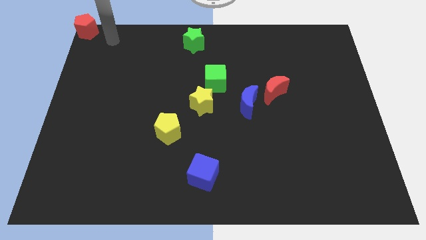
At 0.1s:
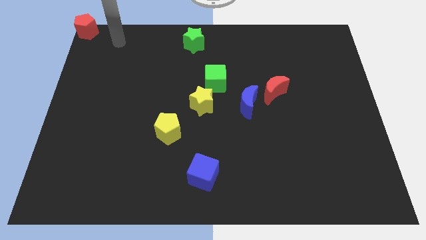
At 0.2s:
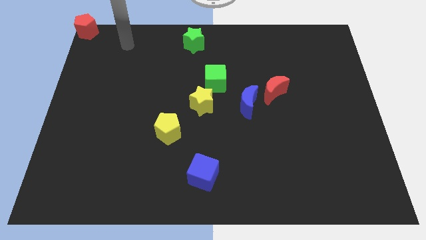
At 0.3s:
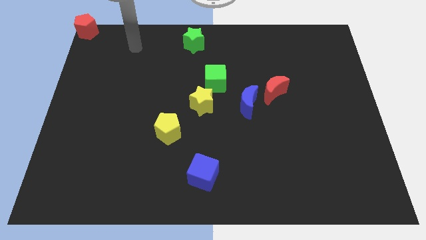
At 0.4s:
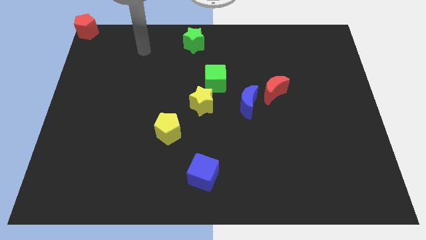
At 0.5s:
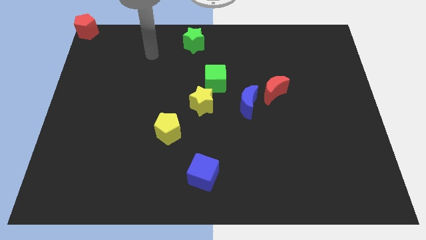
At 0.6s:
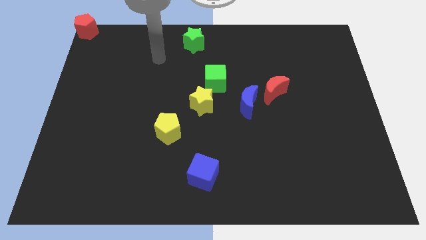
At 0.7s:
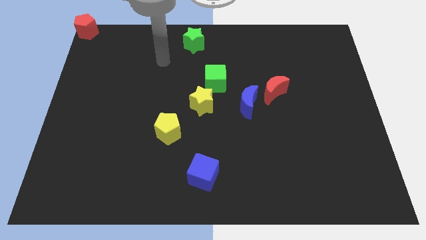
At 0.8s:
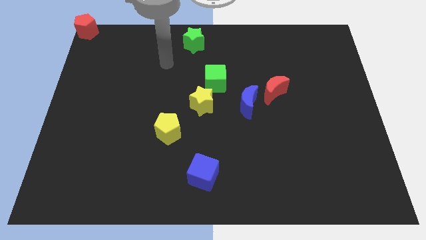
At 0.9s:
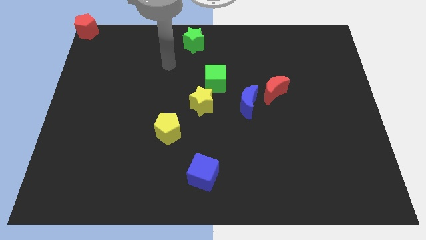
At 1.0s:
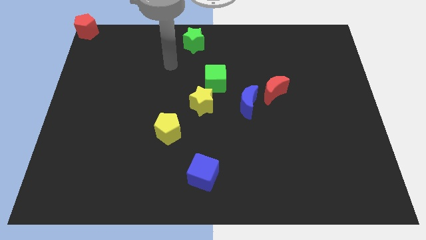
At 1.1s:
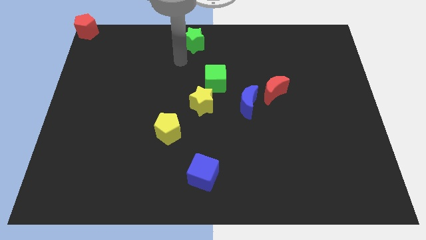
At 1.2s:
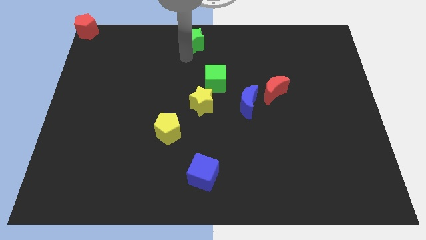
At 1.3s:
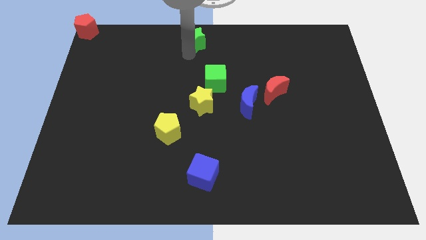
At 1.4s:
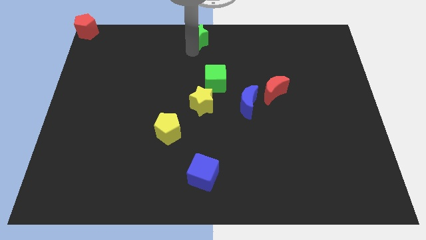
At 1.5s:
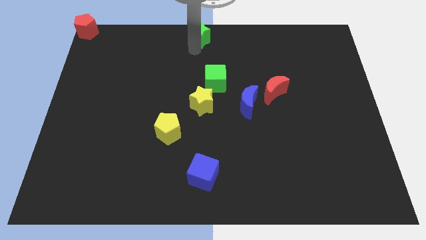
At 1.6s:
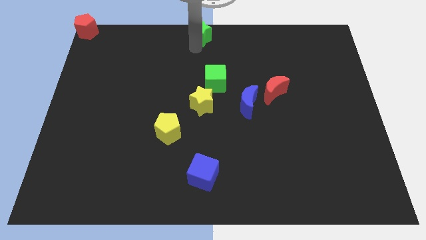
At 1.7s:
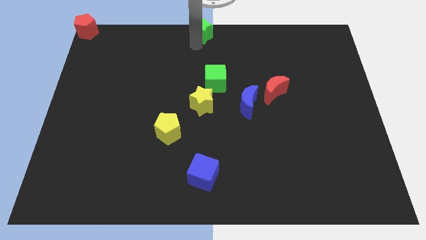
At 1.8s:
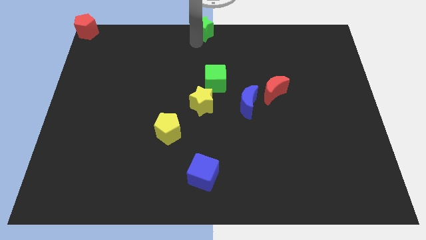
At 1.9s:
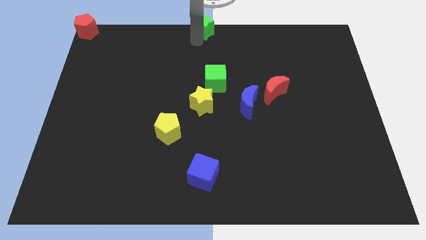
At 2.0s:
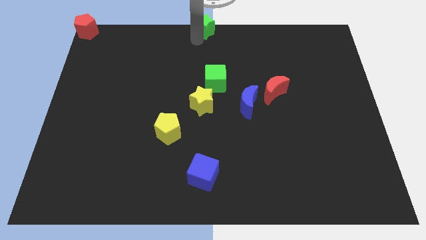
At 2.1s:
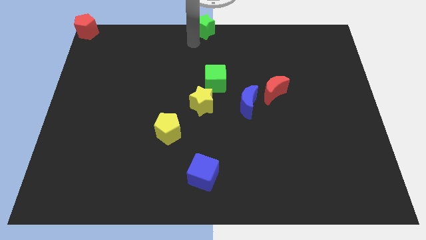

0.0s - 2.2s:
move the green star to the top center of the board

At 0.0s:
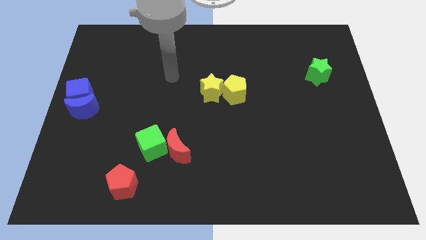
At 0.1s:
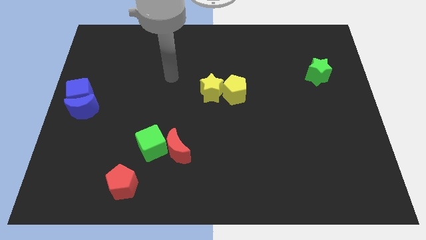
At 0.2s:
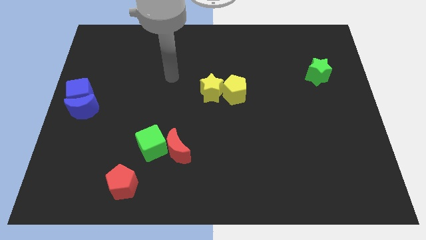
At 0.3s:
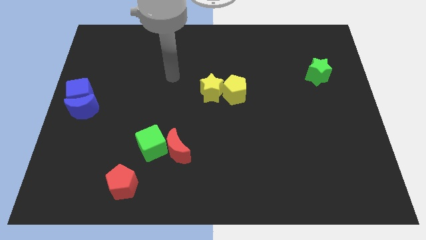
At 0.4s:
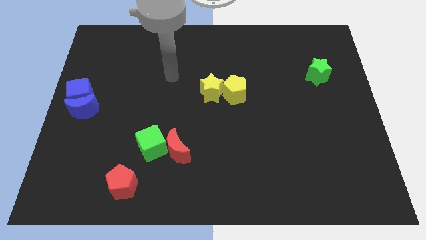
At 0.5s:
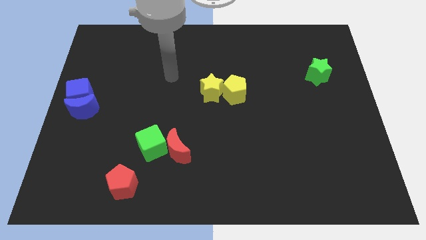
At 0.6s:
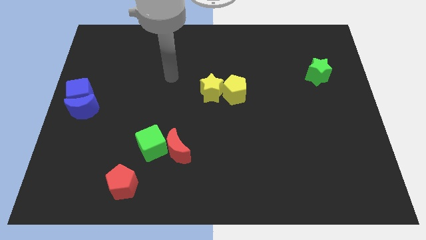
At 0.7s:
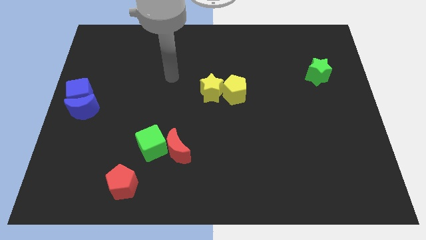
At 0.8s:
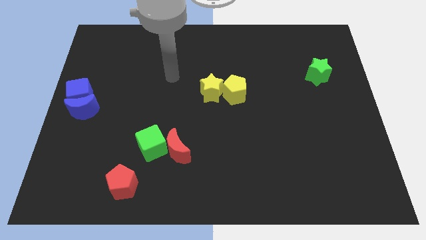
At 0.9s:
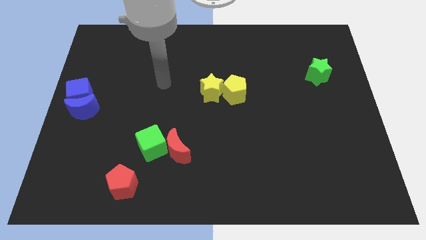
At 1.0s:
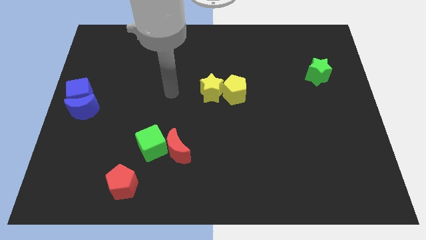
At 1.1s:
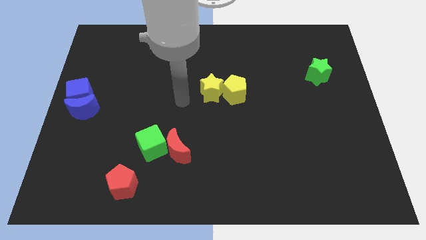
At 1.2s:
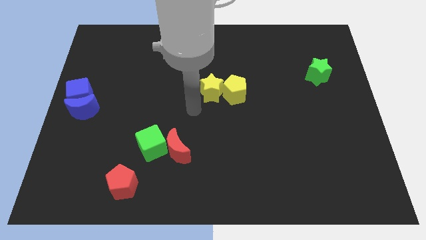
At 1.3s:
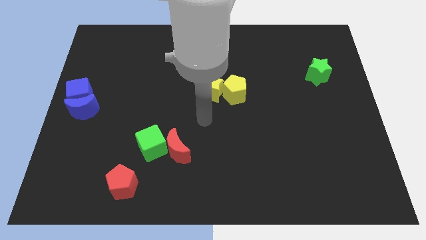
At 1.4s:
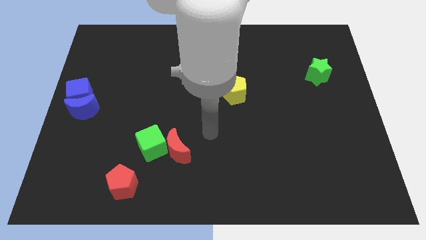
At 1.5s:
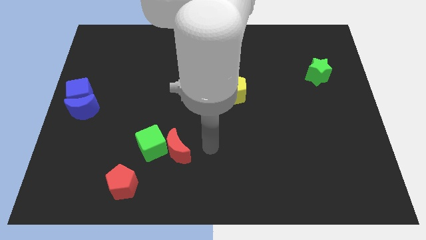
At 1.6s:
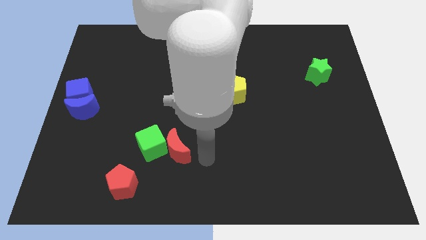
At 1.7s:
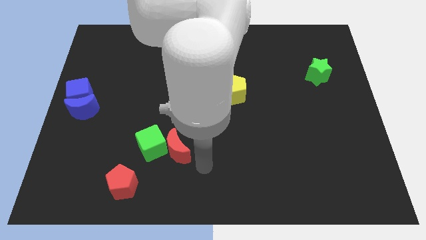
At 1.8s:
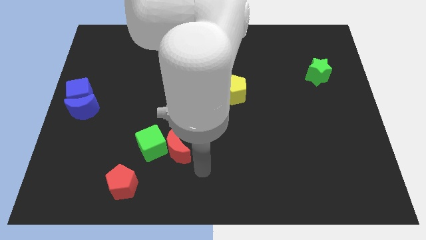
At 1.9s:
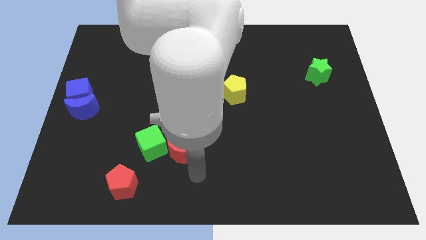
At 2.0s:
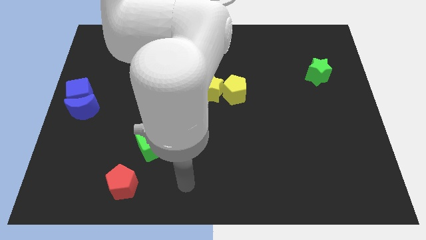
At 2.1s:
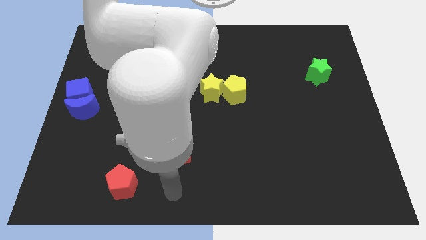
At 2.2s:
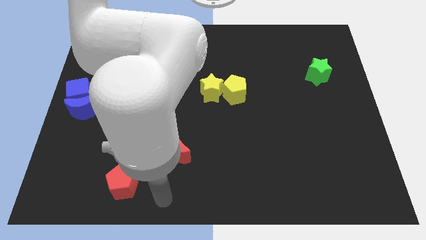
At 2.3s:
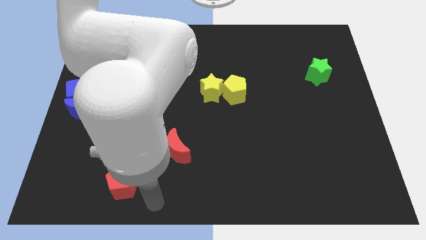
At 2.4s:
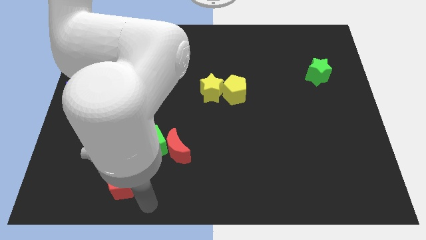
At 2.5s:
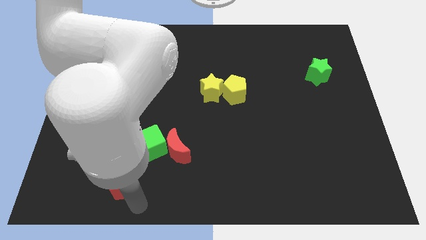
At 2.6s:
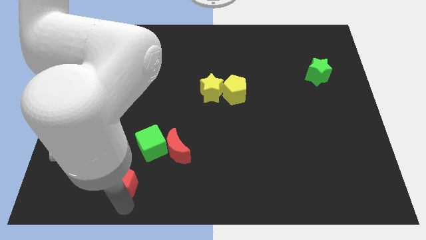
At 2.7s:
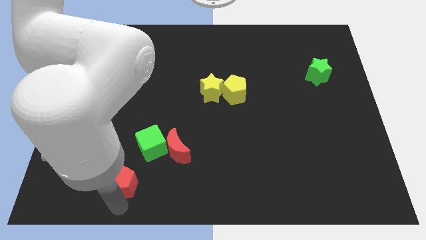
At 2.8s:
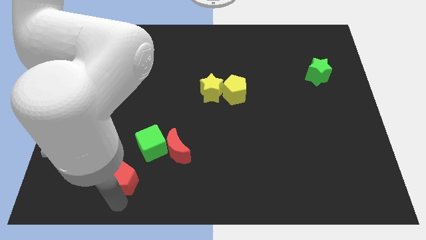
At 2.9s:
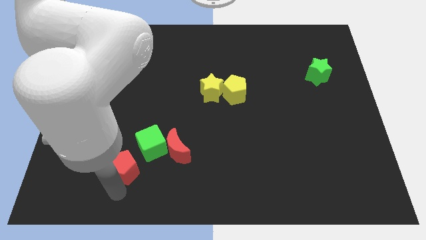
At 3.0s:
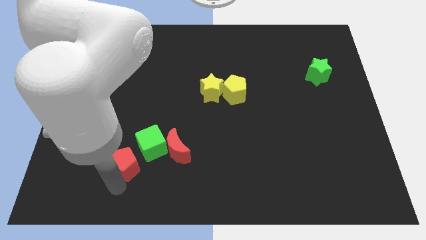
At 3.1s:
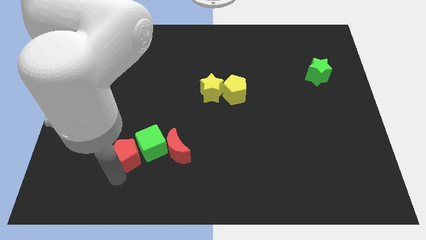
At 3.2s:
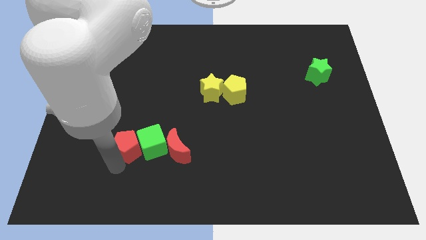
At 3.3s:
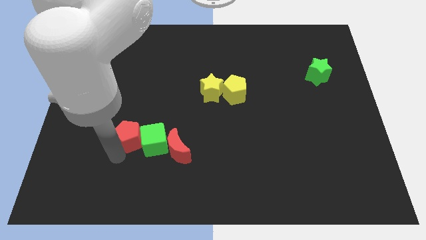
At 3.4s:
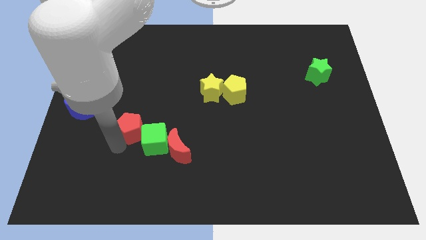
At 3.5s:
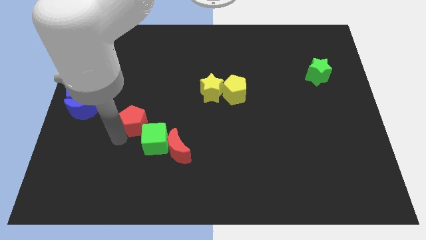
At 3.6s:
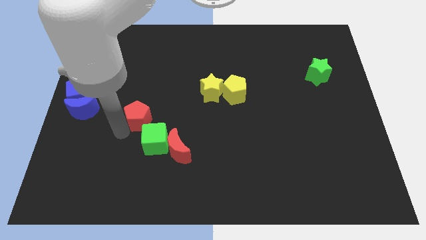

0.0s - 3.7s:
move the red pentagon towards the green cube

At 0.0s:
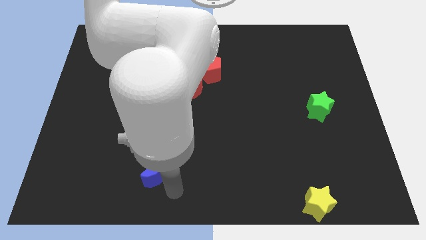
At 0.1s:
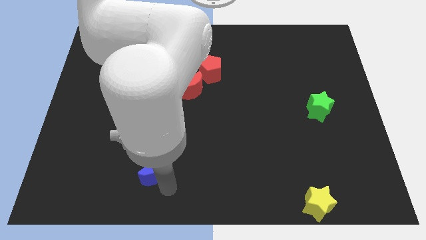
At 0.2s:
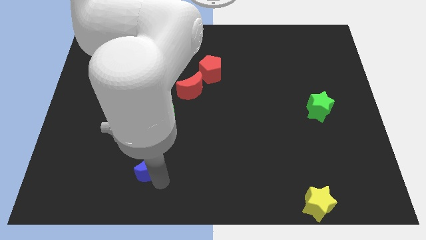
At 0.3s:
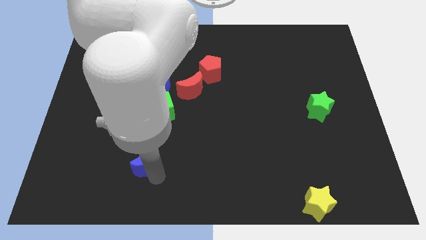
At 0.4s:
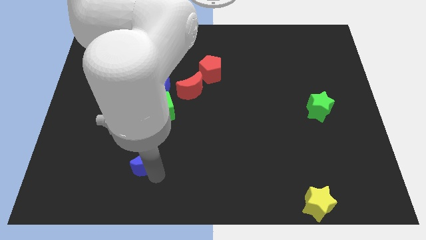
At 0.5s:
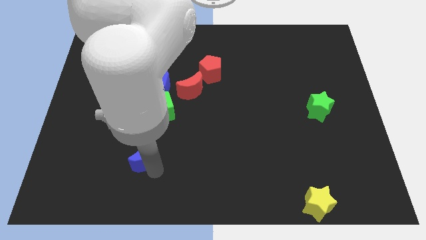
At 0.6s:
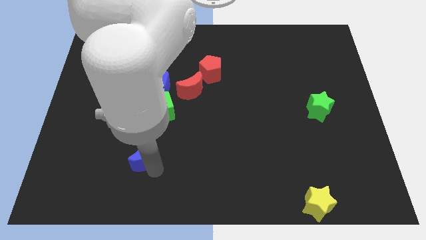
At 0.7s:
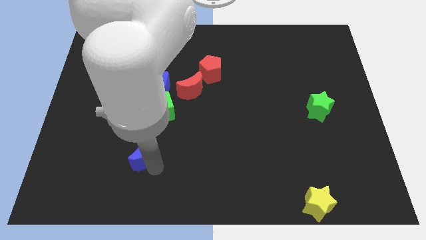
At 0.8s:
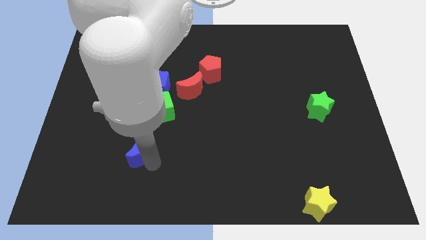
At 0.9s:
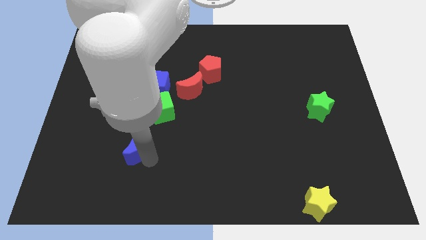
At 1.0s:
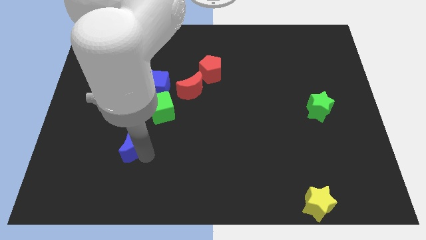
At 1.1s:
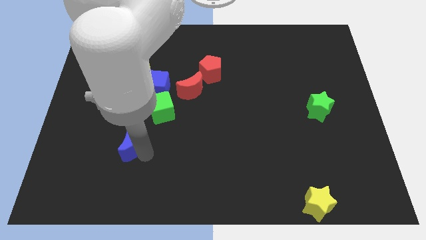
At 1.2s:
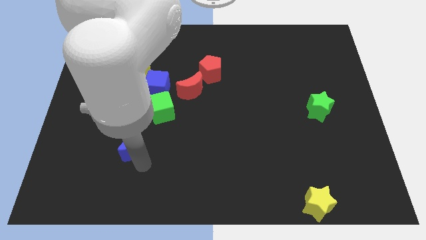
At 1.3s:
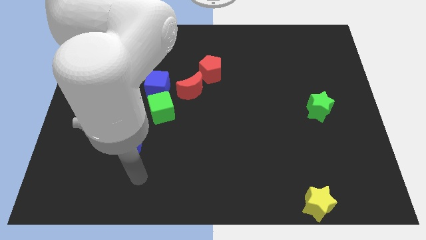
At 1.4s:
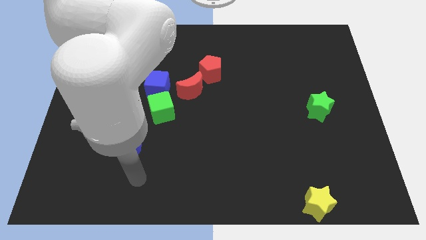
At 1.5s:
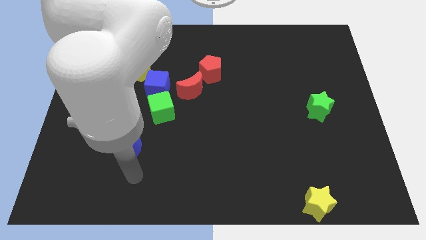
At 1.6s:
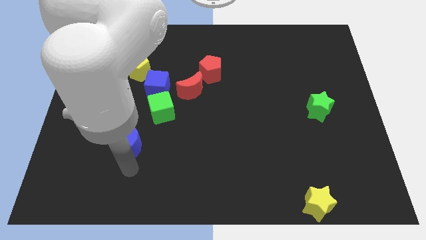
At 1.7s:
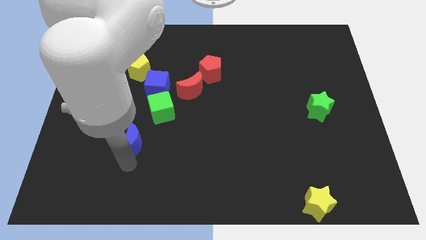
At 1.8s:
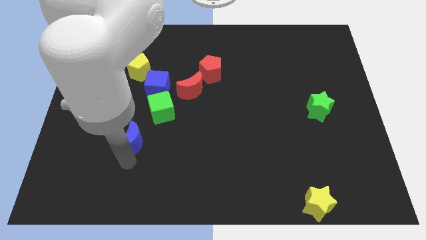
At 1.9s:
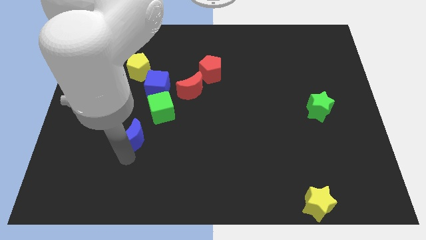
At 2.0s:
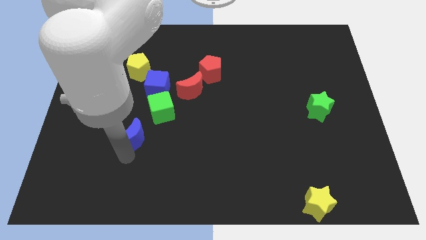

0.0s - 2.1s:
move blue crescent towards the left of the green cube

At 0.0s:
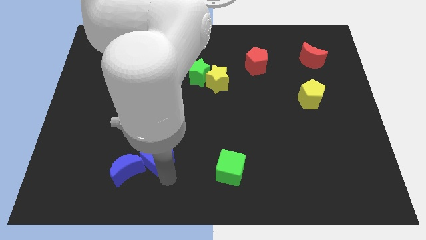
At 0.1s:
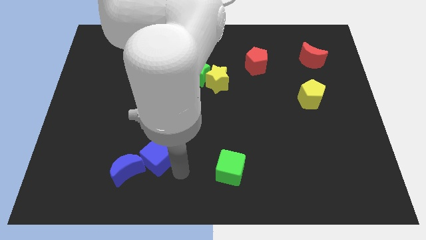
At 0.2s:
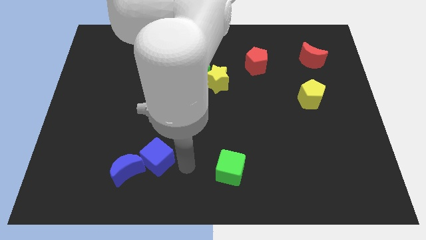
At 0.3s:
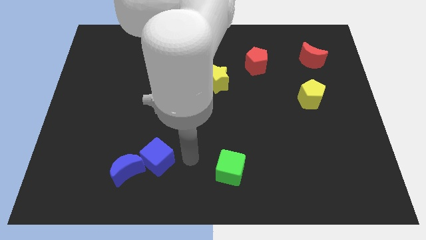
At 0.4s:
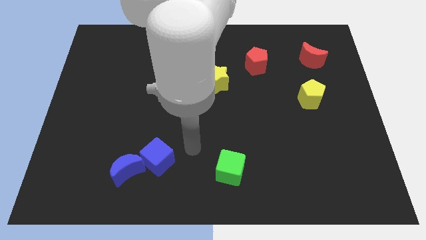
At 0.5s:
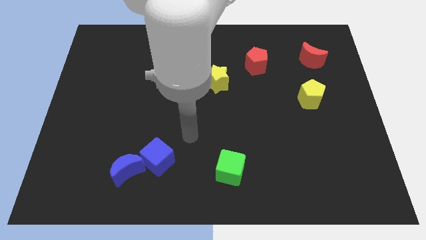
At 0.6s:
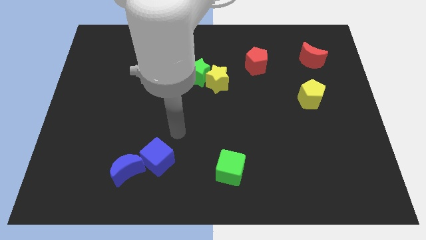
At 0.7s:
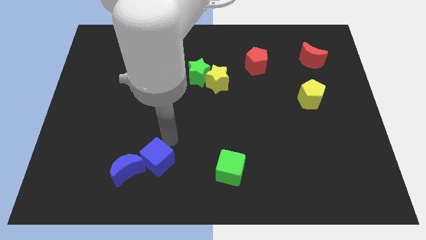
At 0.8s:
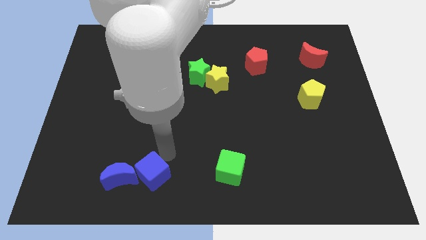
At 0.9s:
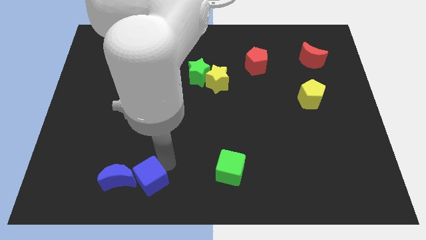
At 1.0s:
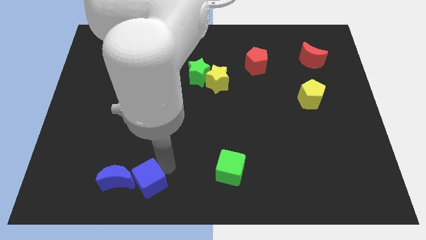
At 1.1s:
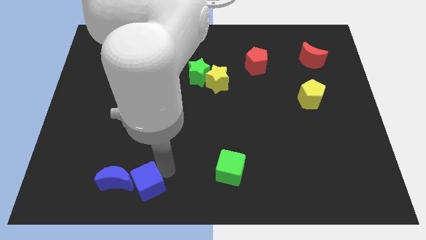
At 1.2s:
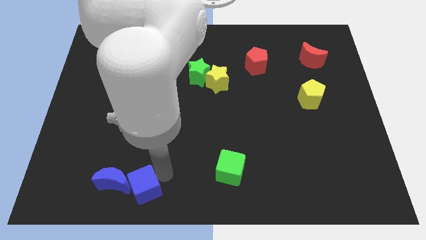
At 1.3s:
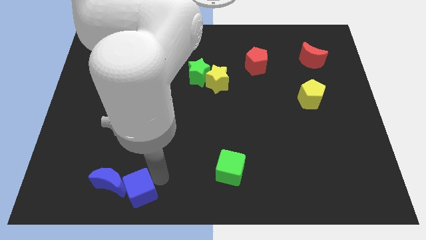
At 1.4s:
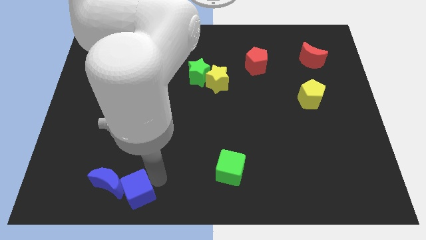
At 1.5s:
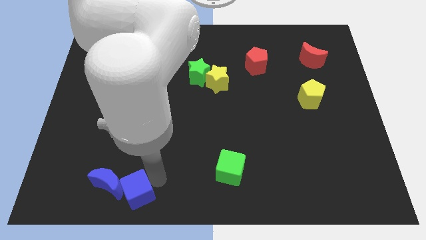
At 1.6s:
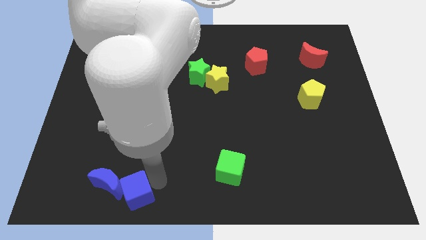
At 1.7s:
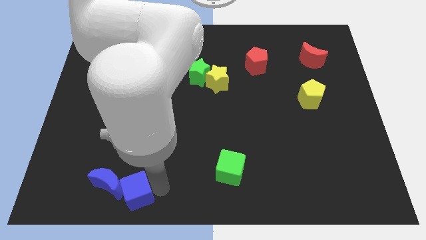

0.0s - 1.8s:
push the blue blocks slightly to the bottom
